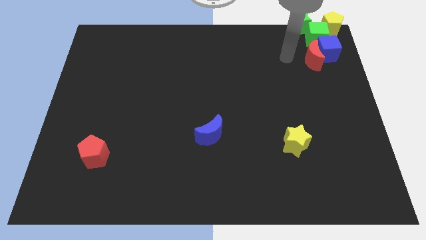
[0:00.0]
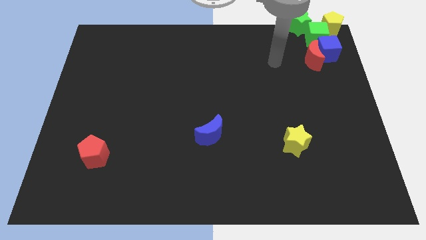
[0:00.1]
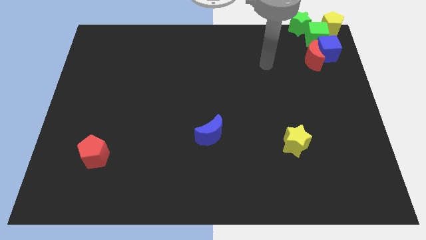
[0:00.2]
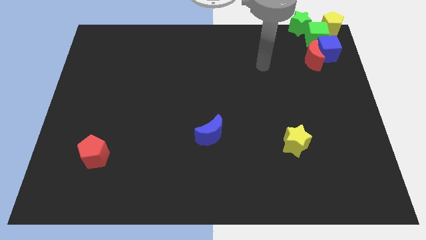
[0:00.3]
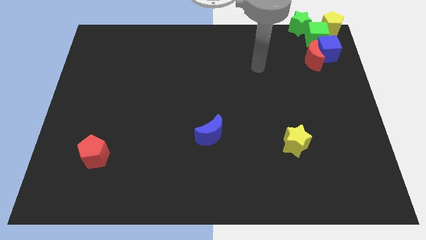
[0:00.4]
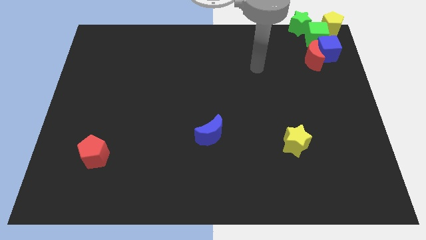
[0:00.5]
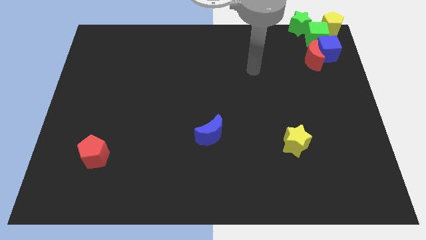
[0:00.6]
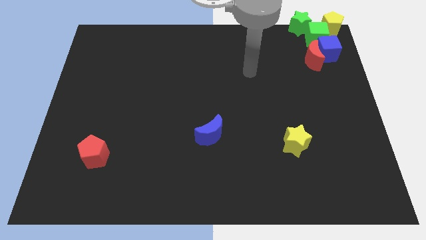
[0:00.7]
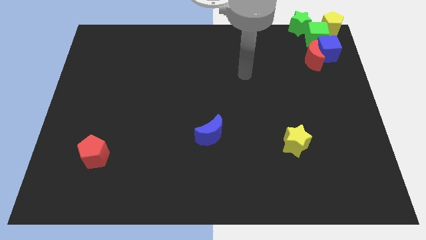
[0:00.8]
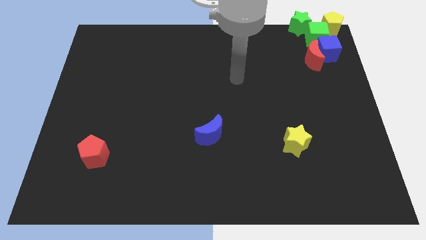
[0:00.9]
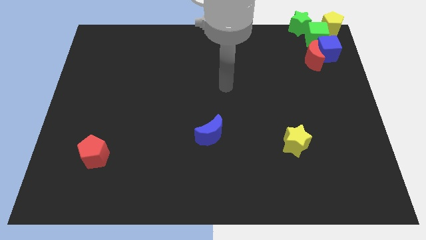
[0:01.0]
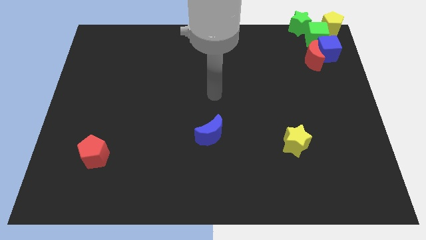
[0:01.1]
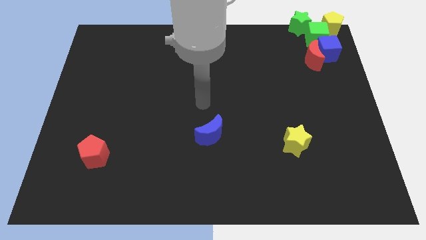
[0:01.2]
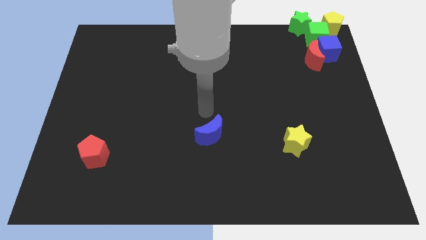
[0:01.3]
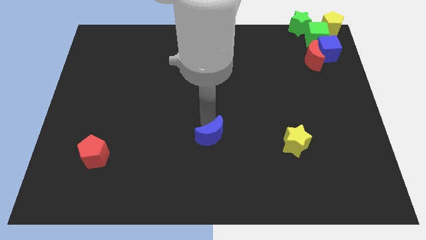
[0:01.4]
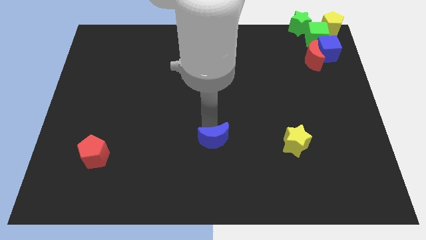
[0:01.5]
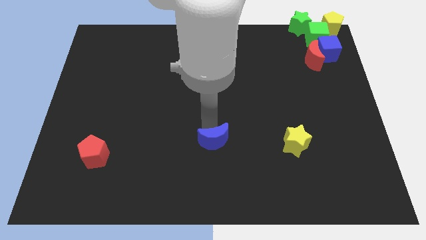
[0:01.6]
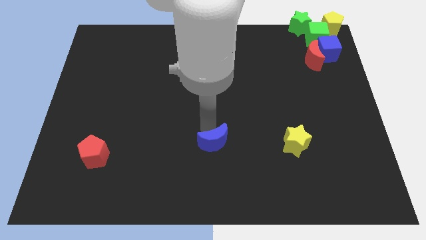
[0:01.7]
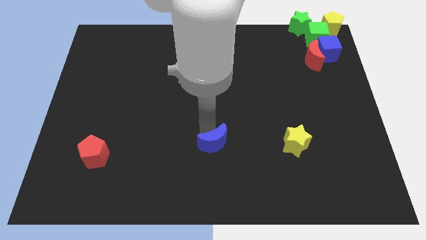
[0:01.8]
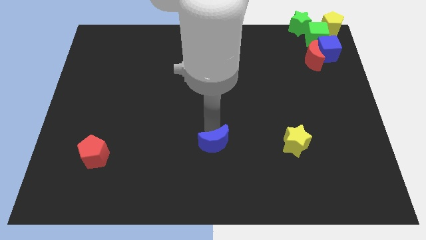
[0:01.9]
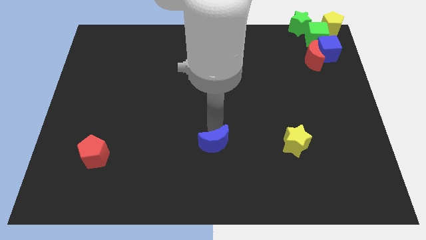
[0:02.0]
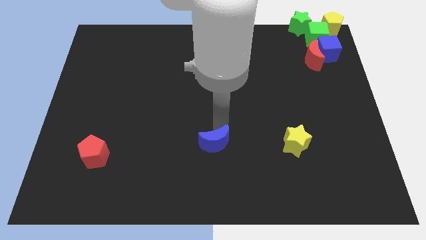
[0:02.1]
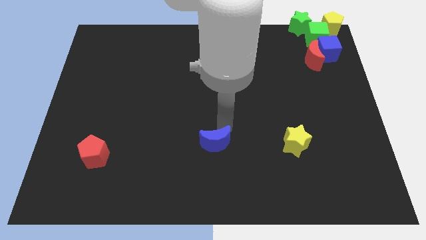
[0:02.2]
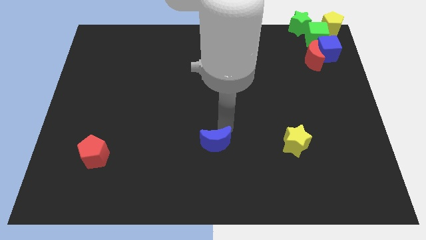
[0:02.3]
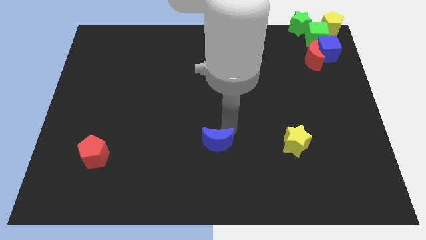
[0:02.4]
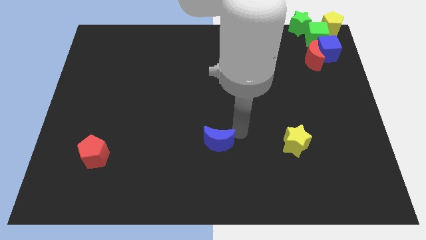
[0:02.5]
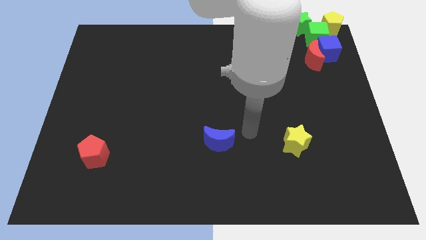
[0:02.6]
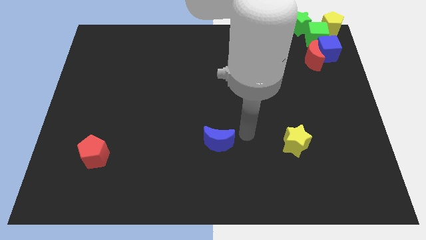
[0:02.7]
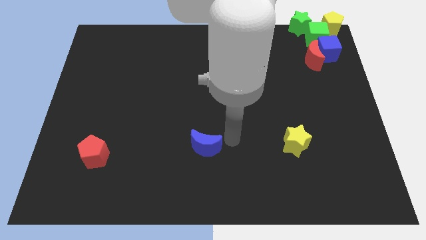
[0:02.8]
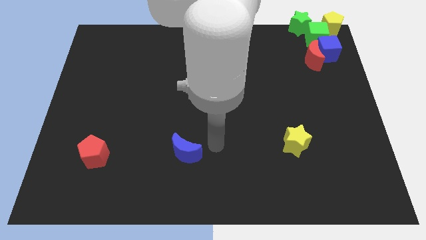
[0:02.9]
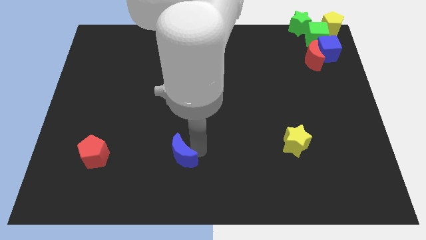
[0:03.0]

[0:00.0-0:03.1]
slide the blue moon in between the yellow star and the red pentagon

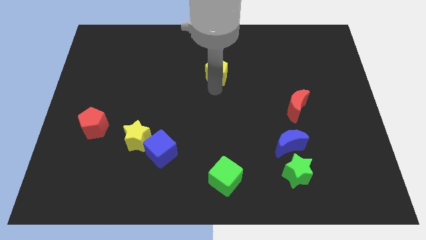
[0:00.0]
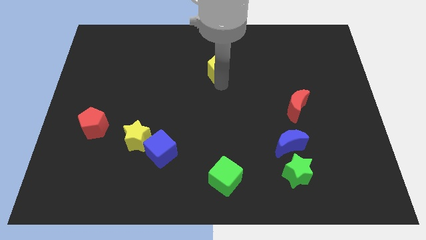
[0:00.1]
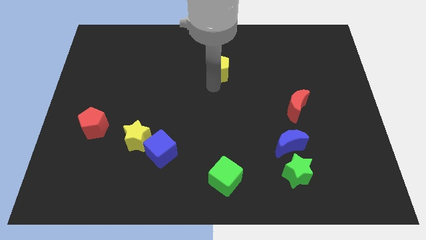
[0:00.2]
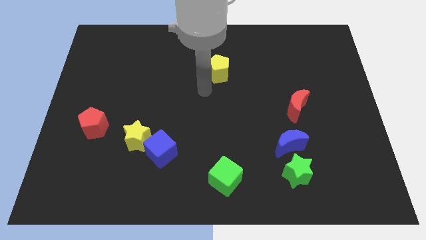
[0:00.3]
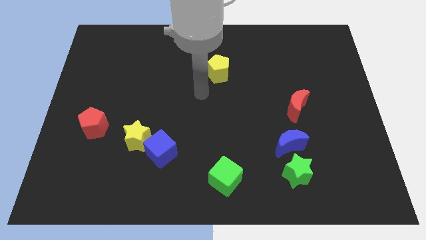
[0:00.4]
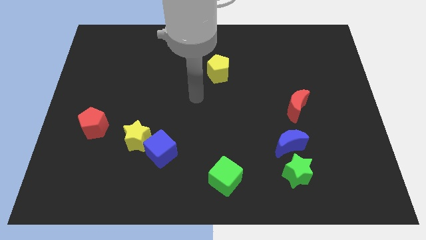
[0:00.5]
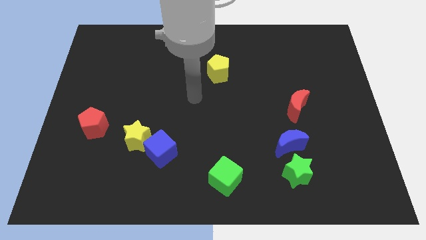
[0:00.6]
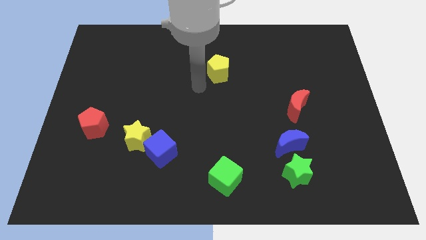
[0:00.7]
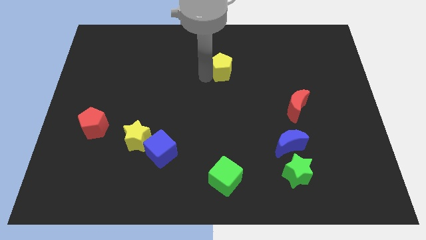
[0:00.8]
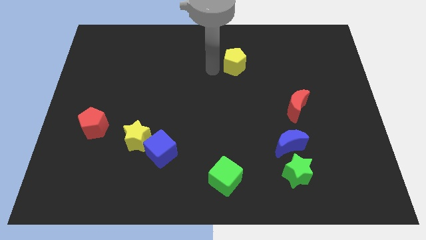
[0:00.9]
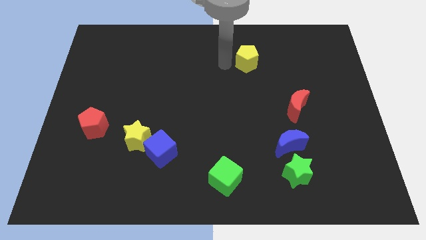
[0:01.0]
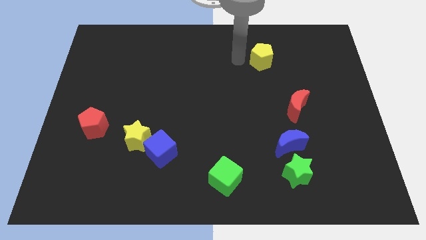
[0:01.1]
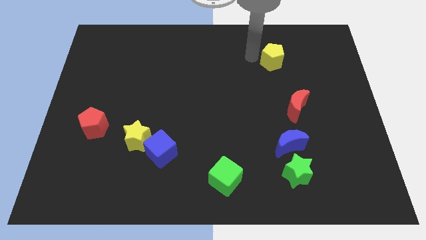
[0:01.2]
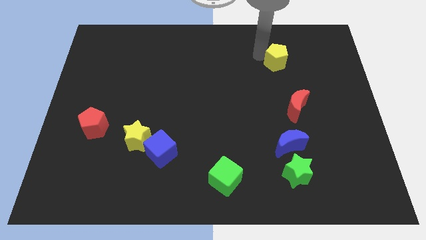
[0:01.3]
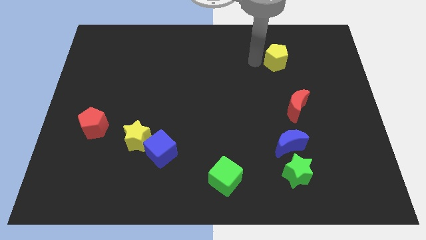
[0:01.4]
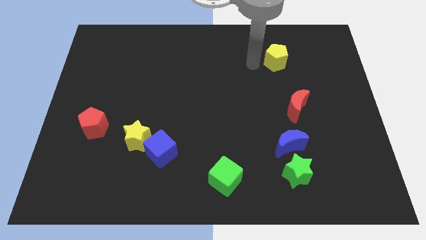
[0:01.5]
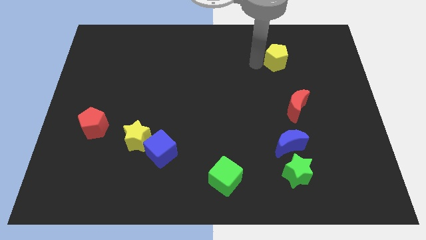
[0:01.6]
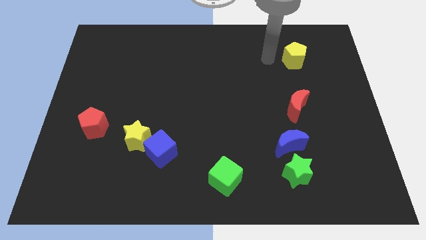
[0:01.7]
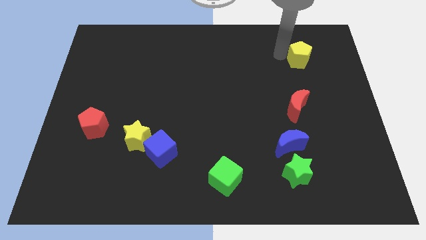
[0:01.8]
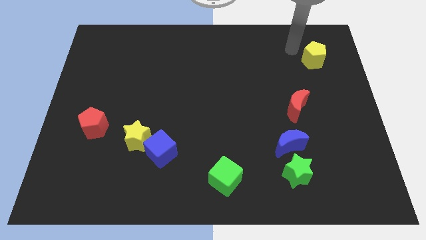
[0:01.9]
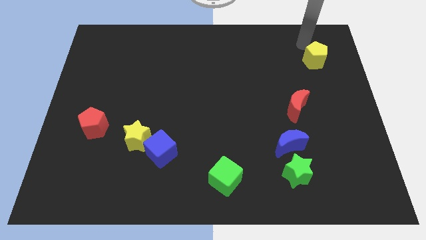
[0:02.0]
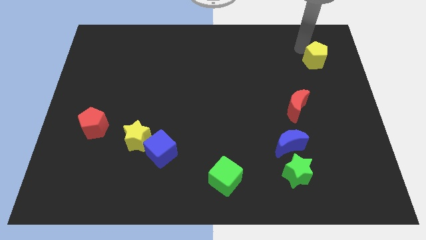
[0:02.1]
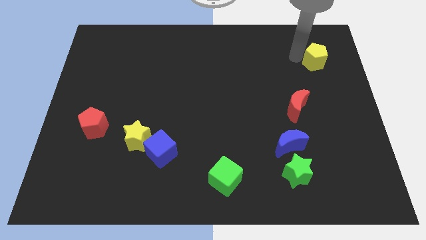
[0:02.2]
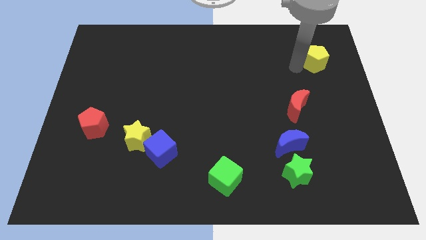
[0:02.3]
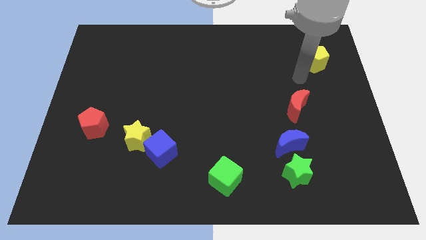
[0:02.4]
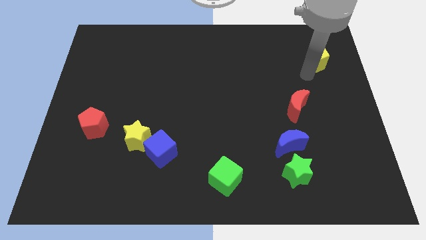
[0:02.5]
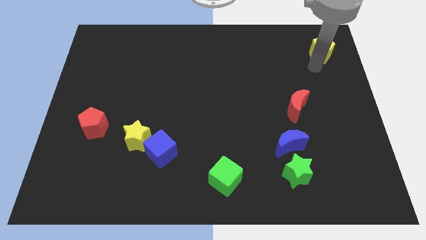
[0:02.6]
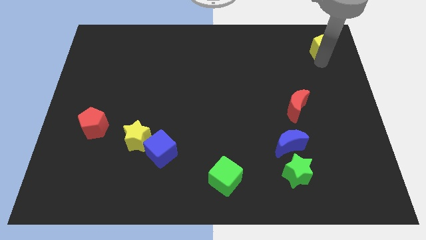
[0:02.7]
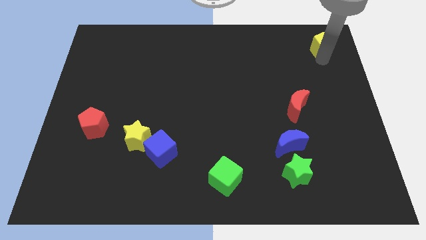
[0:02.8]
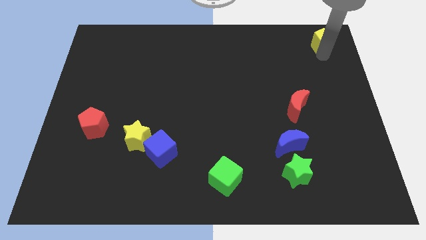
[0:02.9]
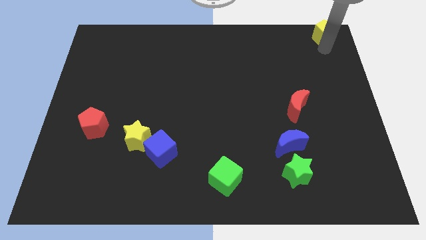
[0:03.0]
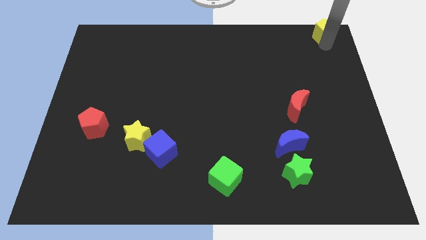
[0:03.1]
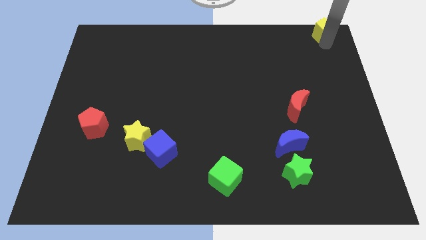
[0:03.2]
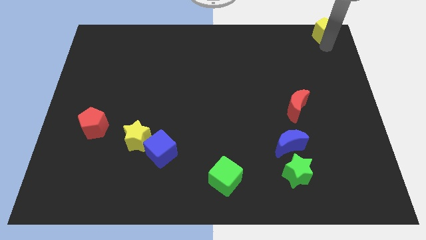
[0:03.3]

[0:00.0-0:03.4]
move the yellow pentagon to the top right corner of the board

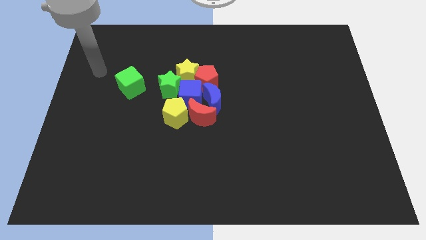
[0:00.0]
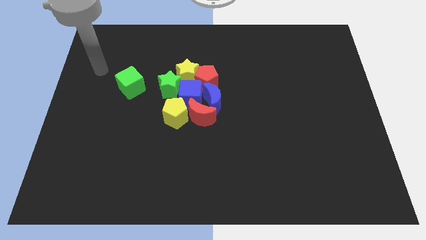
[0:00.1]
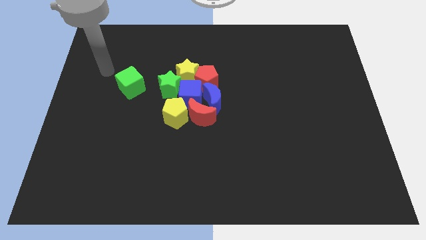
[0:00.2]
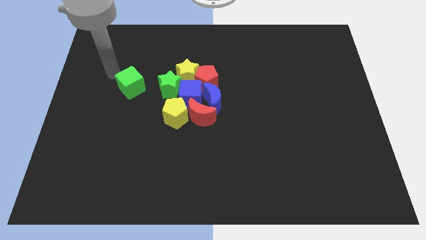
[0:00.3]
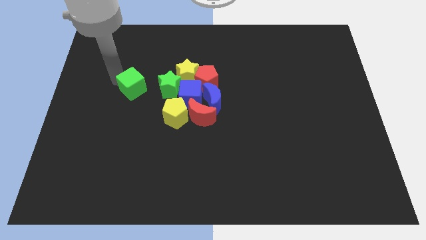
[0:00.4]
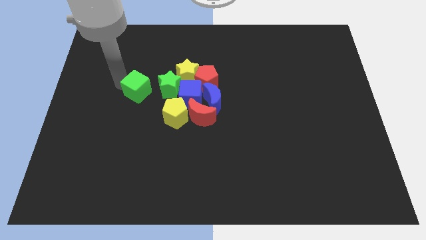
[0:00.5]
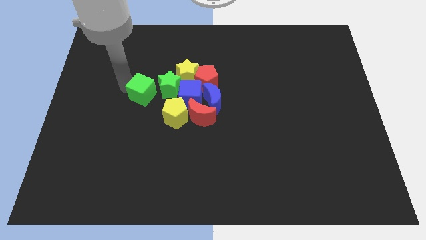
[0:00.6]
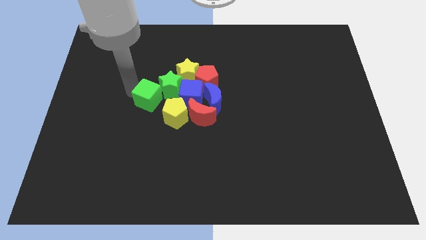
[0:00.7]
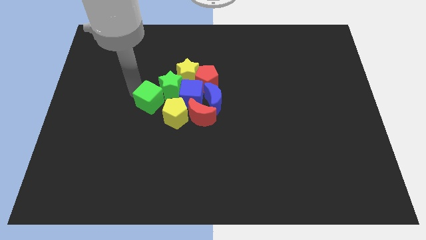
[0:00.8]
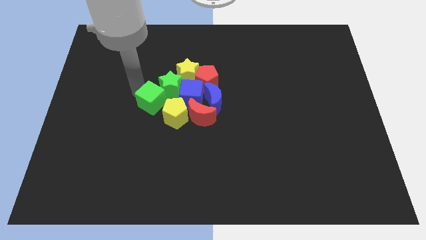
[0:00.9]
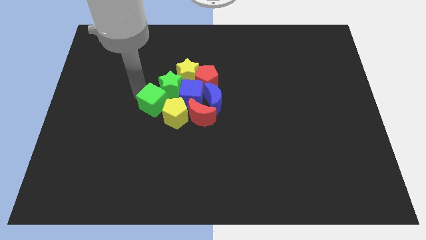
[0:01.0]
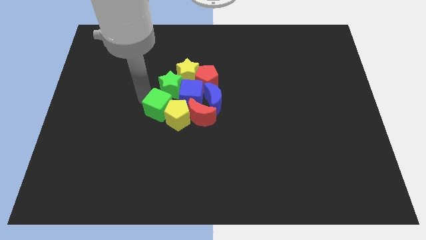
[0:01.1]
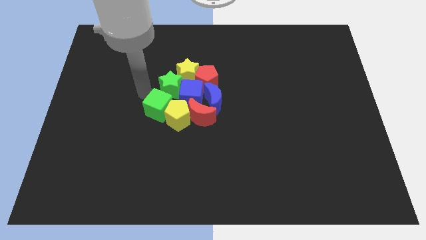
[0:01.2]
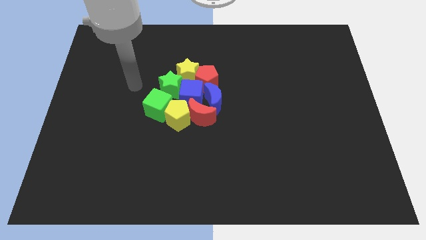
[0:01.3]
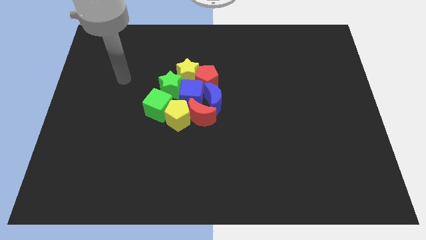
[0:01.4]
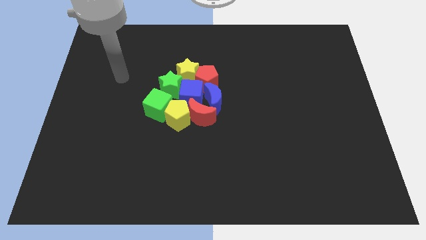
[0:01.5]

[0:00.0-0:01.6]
push the green cube into the yellow pentagon

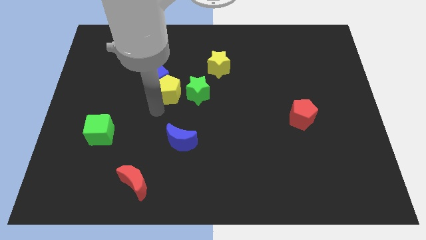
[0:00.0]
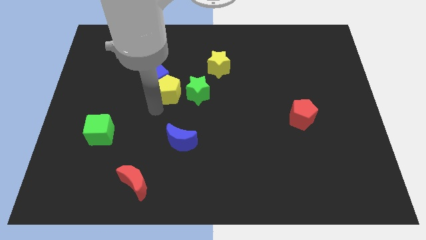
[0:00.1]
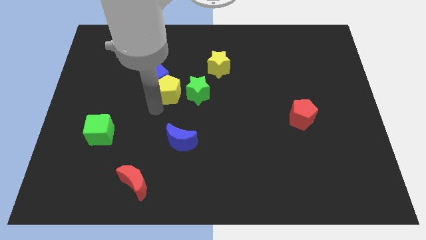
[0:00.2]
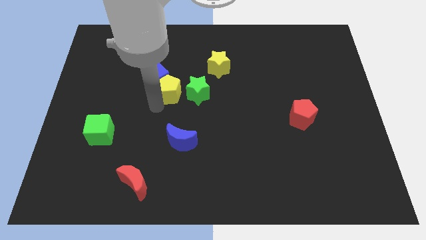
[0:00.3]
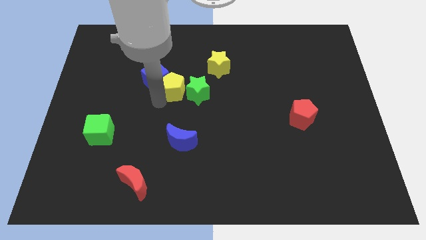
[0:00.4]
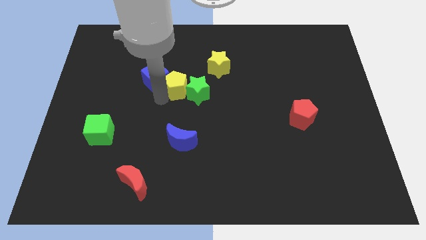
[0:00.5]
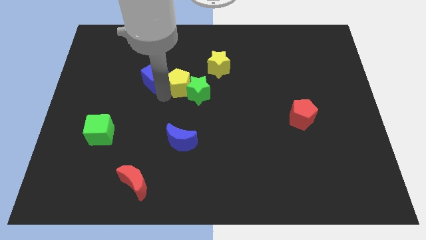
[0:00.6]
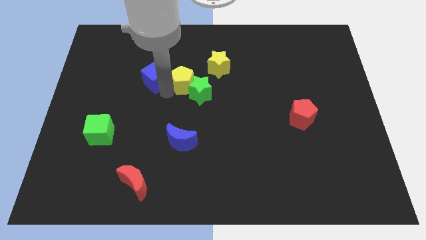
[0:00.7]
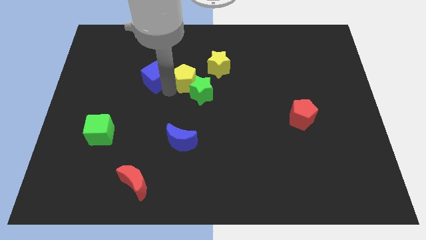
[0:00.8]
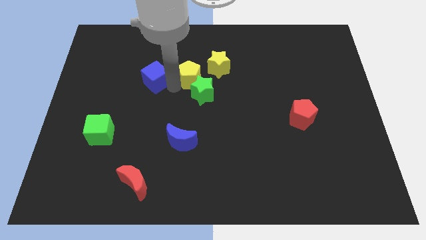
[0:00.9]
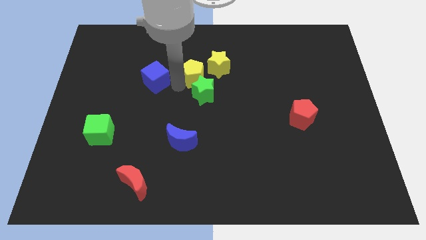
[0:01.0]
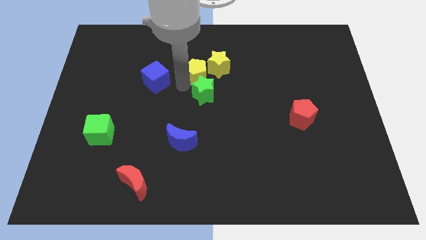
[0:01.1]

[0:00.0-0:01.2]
push the yellow pentagon into the top of the green star
